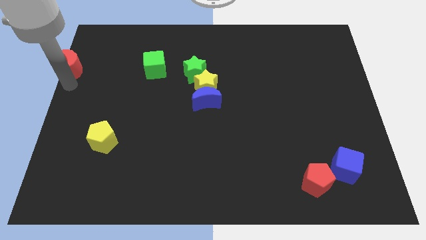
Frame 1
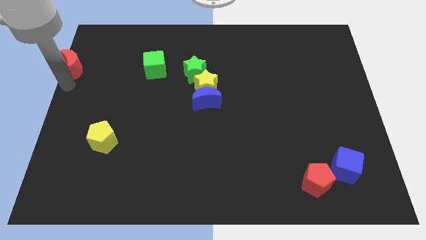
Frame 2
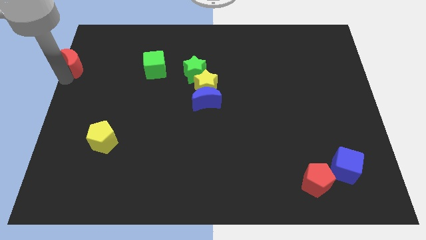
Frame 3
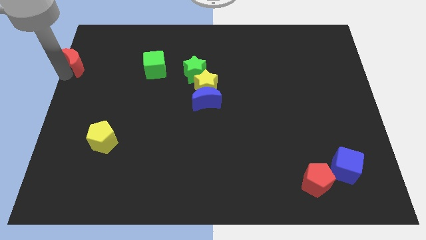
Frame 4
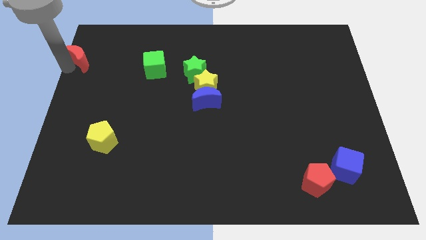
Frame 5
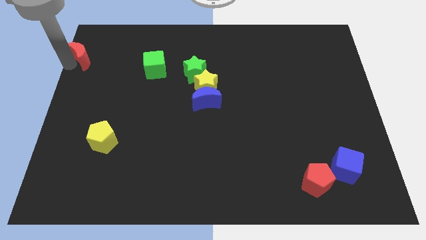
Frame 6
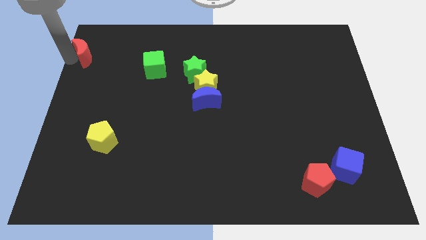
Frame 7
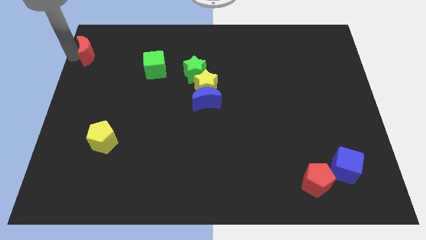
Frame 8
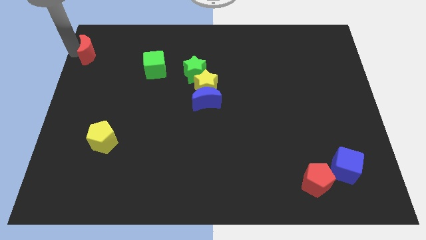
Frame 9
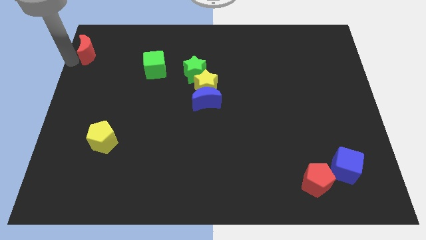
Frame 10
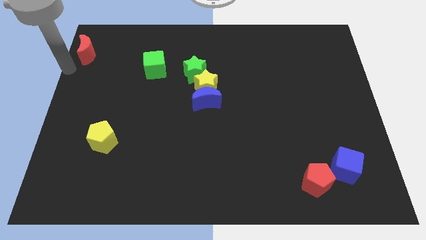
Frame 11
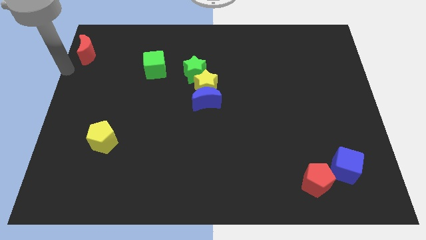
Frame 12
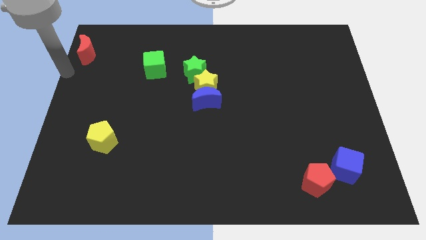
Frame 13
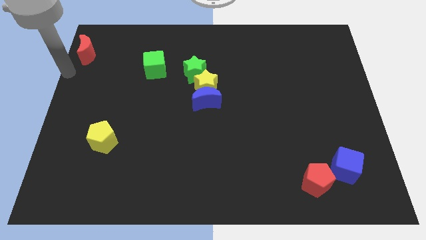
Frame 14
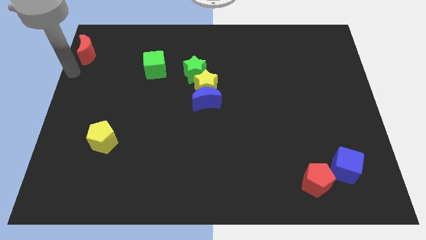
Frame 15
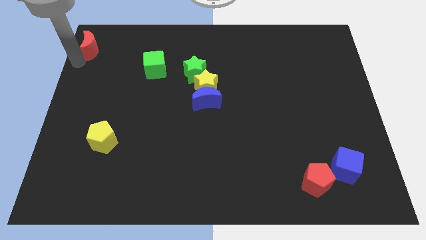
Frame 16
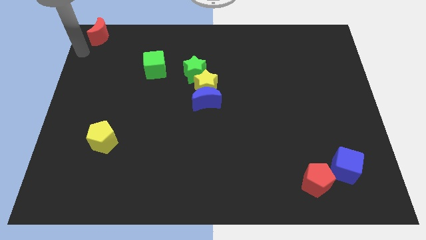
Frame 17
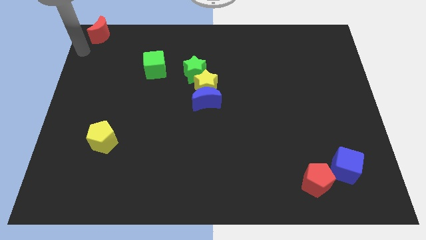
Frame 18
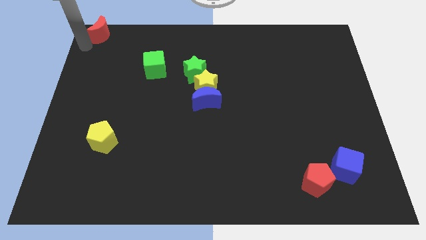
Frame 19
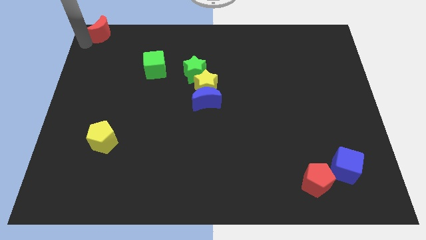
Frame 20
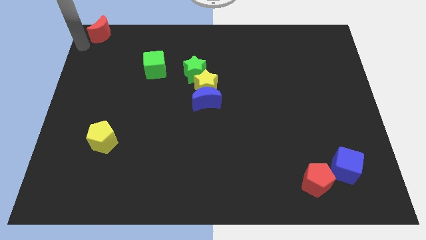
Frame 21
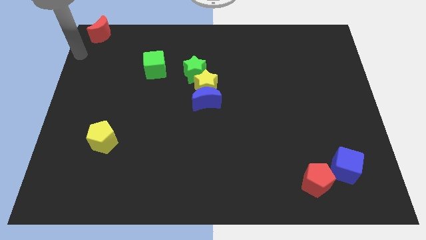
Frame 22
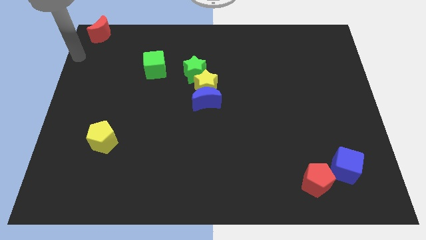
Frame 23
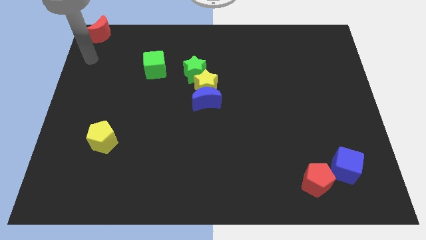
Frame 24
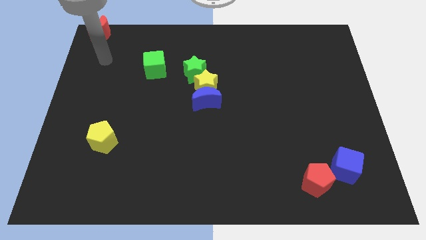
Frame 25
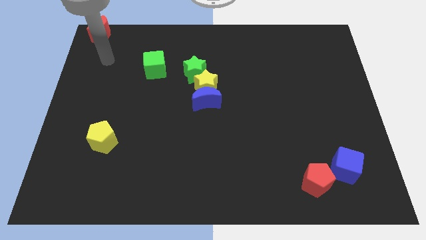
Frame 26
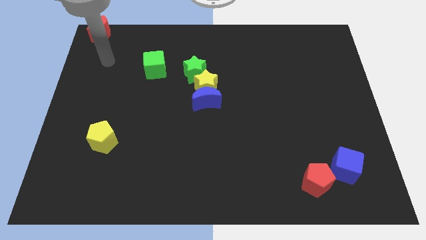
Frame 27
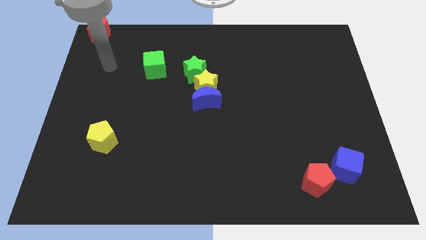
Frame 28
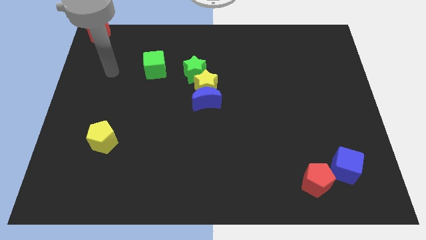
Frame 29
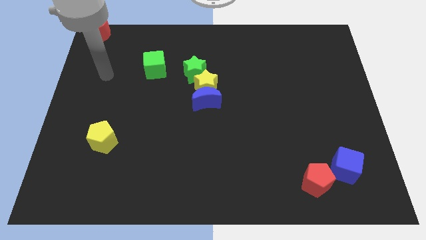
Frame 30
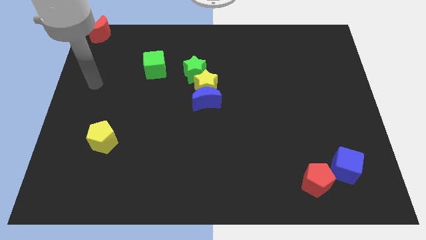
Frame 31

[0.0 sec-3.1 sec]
place the red crescent to the top left corner side

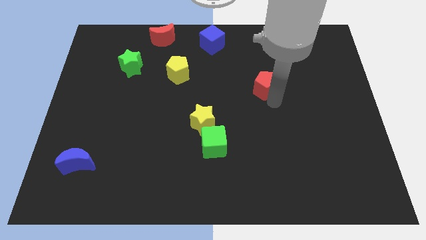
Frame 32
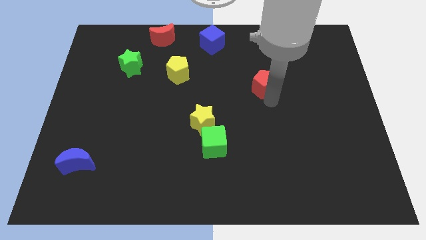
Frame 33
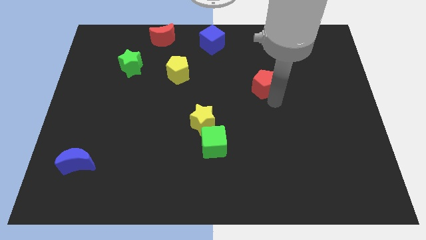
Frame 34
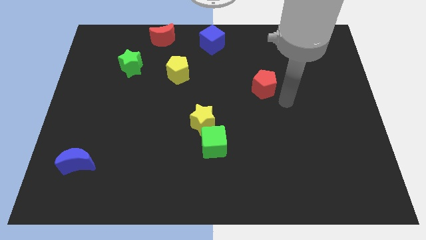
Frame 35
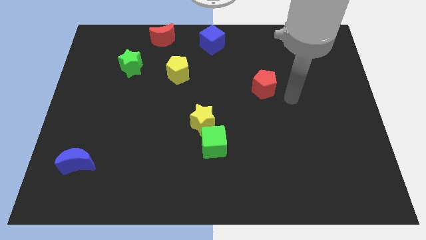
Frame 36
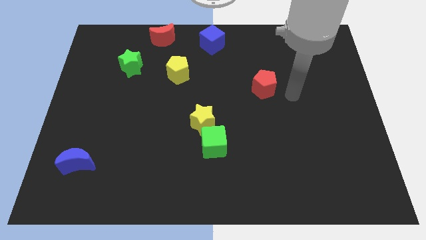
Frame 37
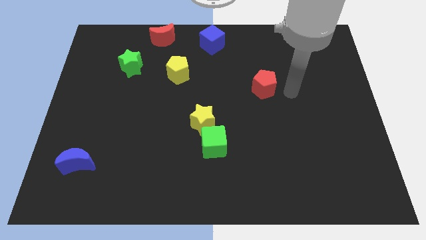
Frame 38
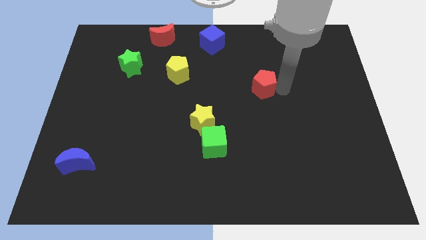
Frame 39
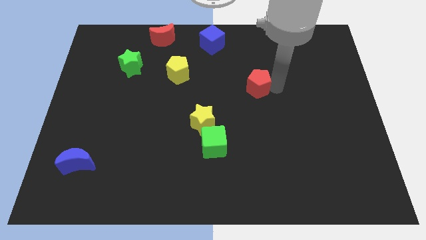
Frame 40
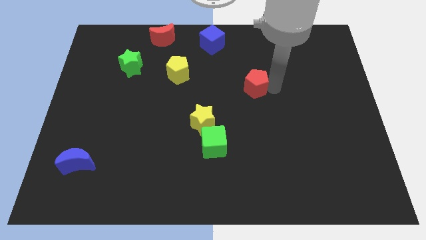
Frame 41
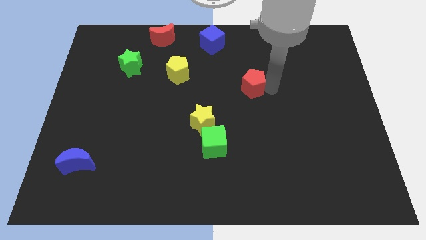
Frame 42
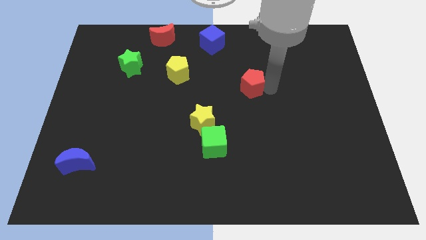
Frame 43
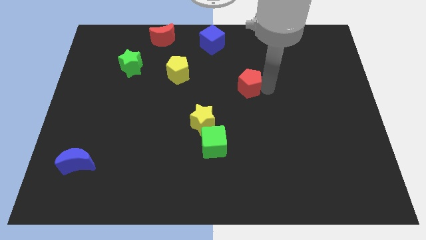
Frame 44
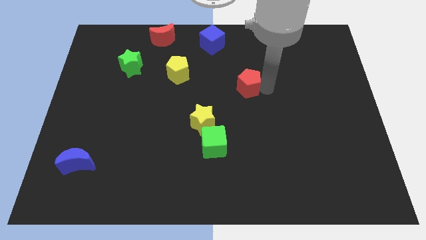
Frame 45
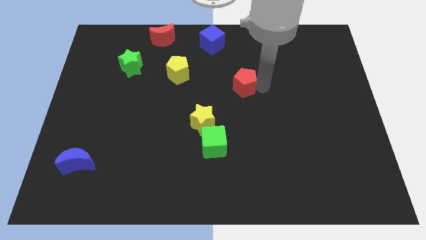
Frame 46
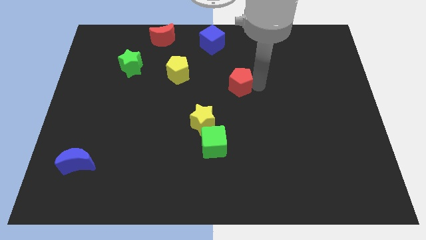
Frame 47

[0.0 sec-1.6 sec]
move the red pentagon to the bottom right of yellow pentagon

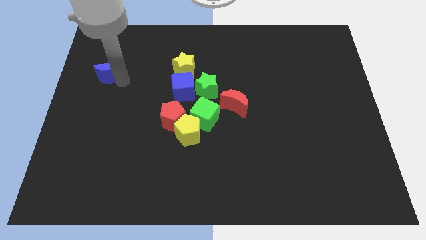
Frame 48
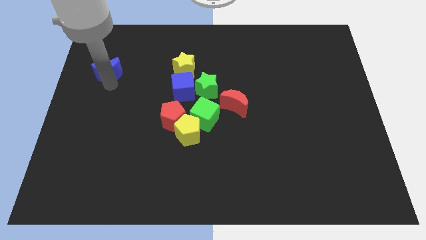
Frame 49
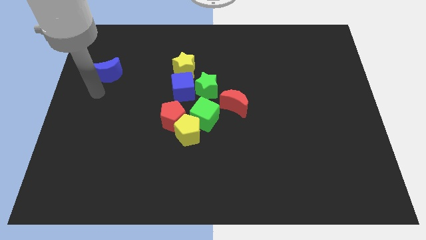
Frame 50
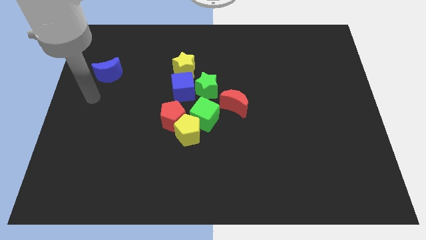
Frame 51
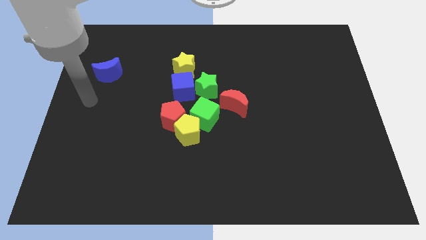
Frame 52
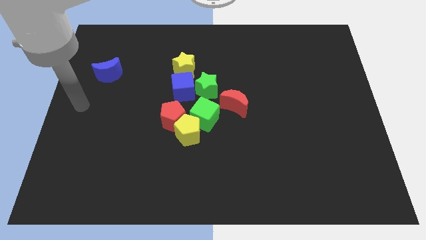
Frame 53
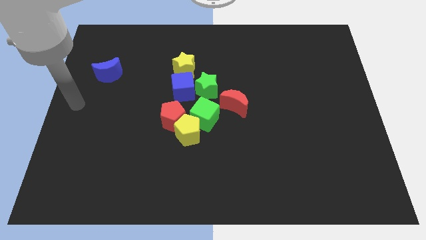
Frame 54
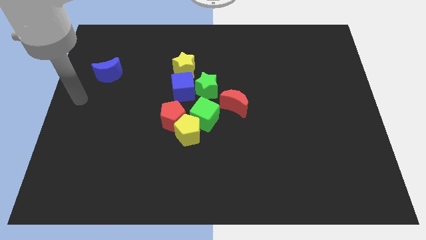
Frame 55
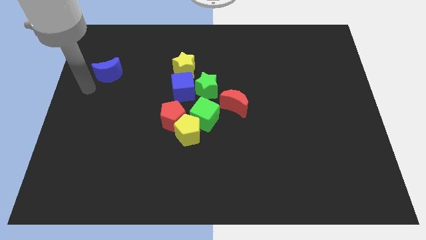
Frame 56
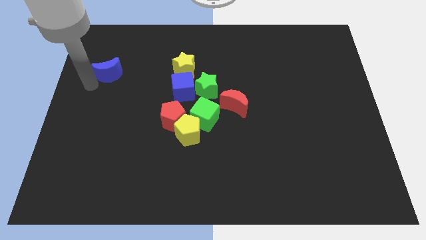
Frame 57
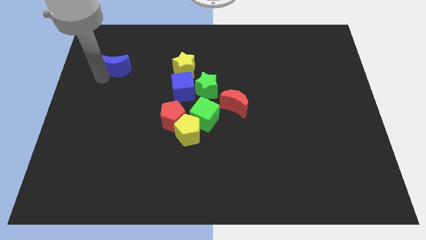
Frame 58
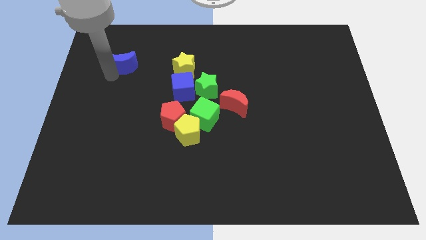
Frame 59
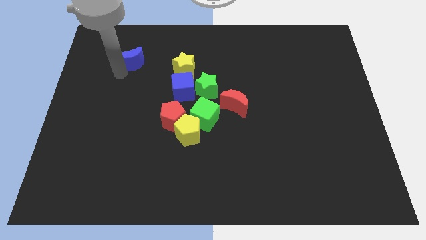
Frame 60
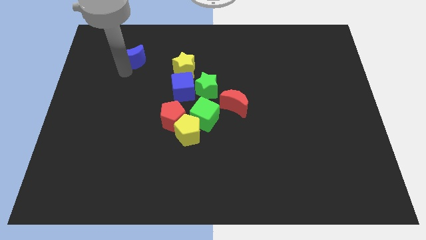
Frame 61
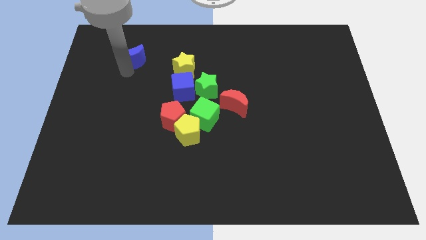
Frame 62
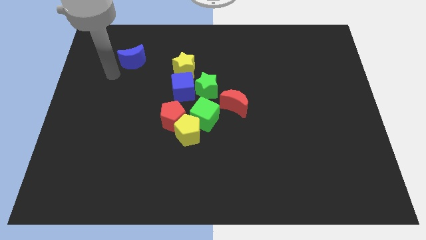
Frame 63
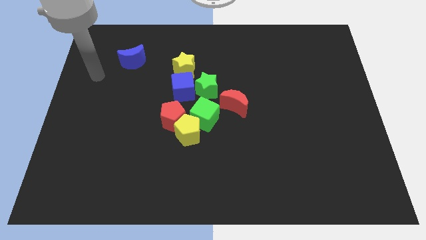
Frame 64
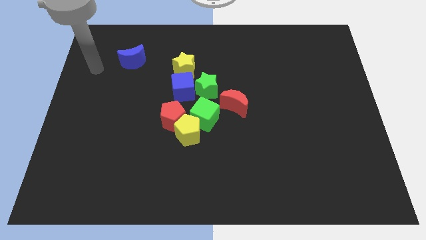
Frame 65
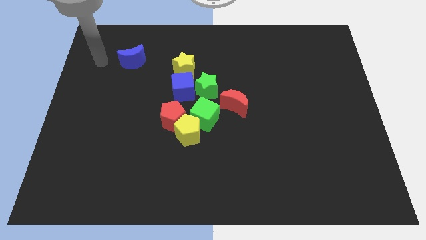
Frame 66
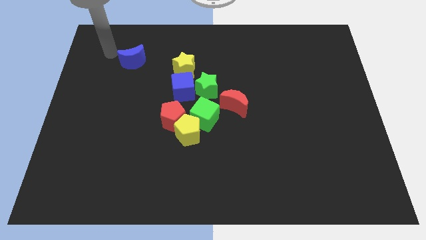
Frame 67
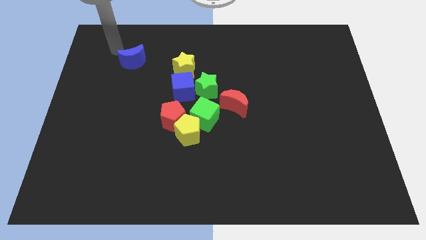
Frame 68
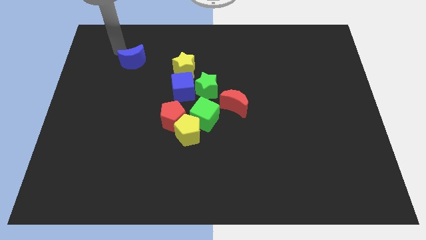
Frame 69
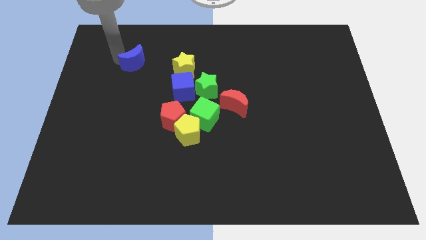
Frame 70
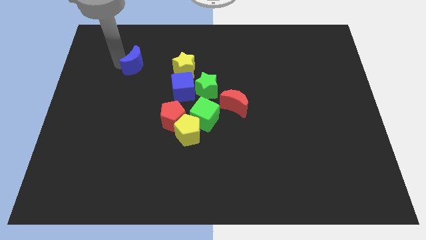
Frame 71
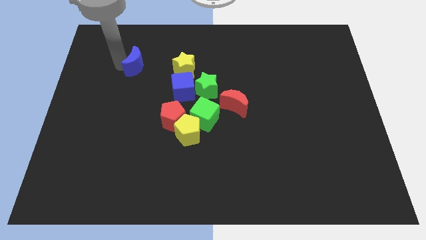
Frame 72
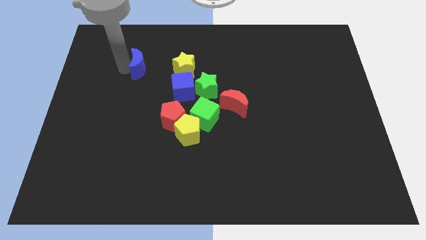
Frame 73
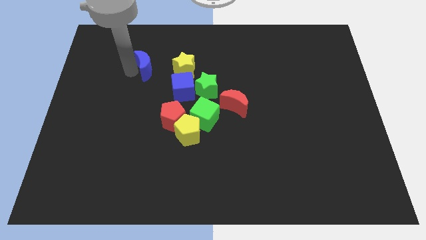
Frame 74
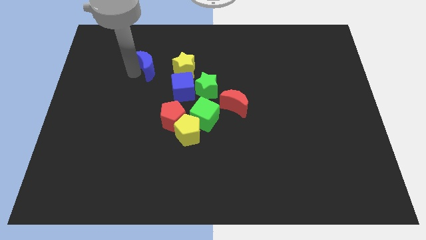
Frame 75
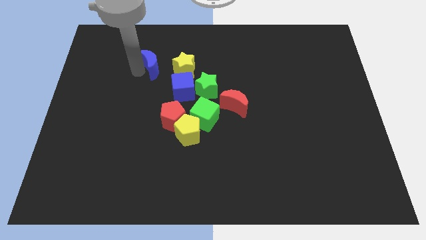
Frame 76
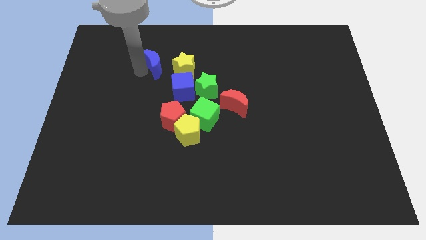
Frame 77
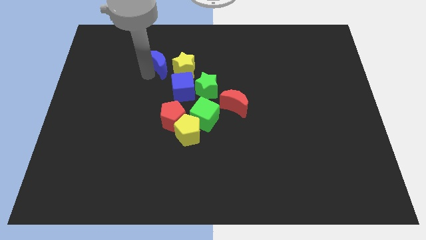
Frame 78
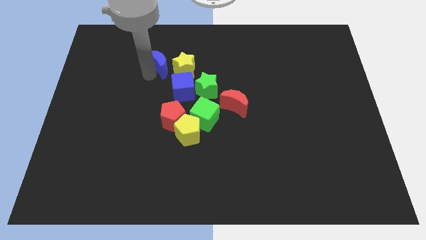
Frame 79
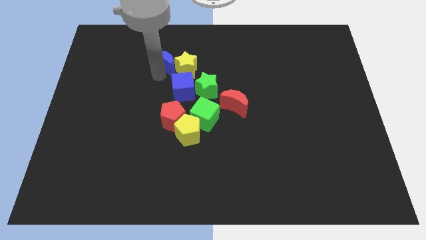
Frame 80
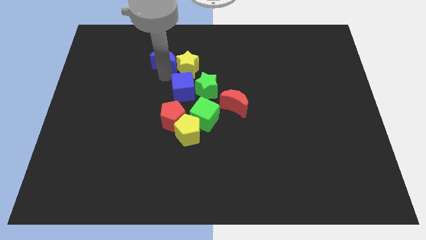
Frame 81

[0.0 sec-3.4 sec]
push the blue crescent into the yellow star

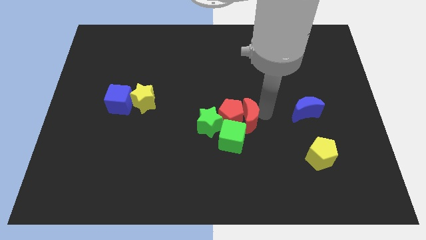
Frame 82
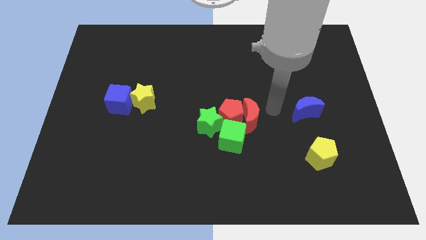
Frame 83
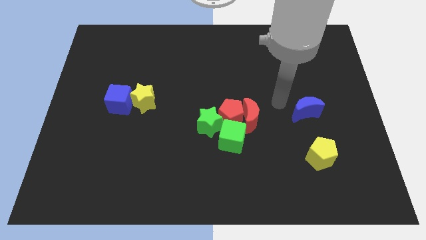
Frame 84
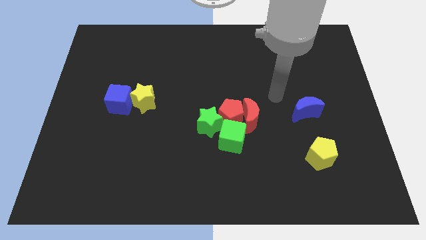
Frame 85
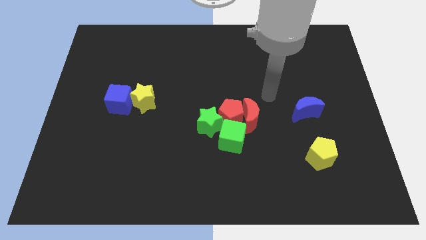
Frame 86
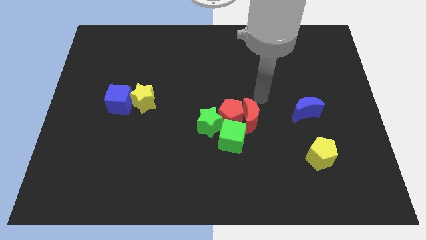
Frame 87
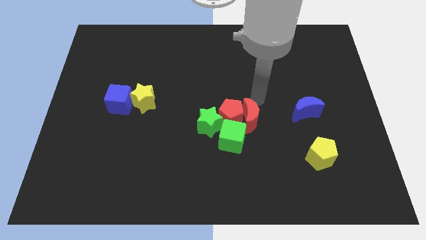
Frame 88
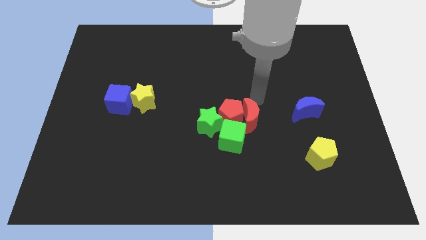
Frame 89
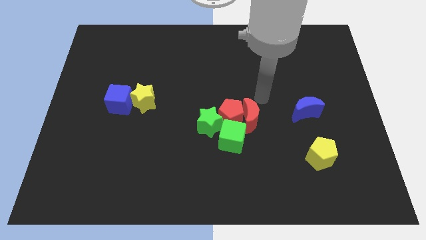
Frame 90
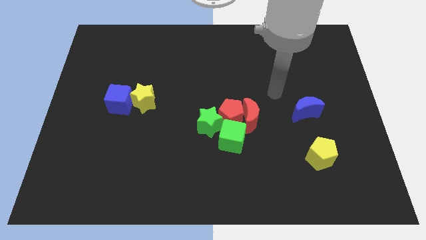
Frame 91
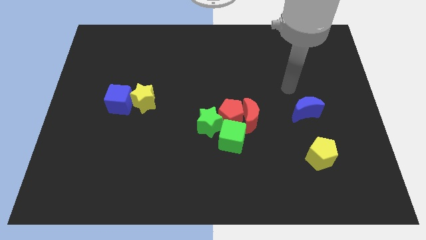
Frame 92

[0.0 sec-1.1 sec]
move your hand away from red moon
